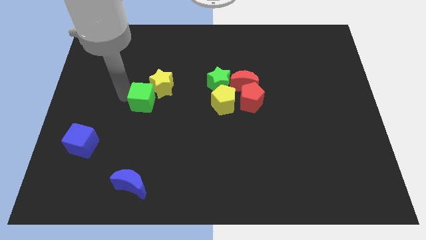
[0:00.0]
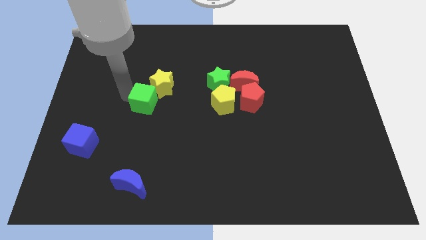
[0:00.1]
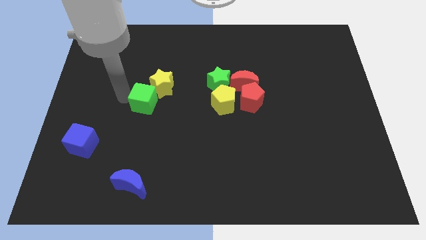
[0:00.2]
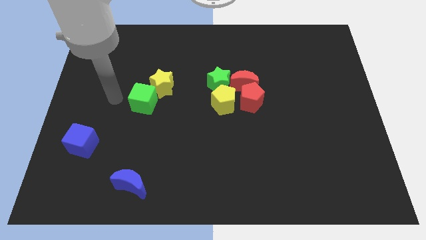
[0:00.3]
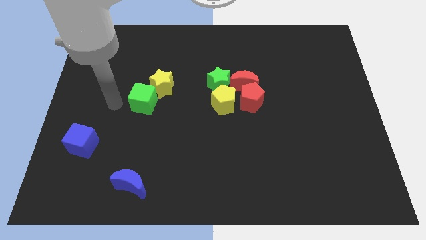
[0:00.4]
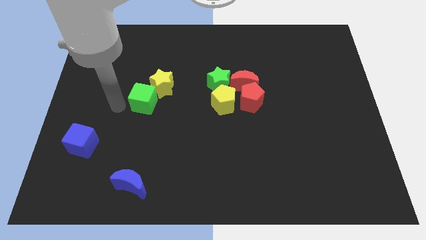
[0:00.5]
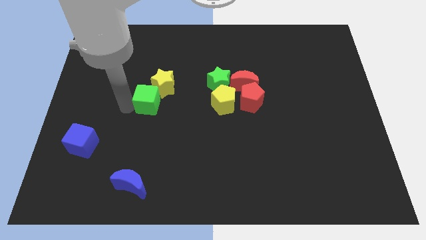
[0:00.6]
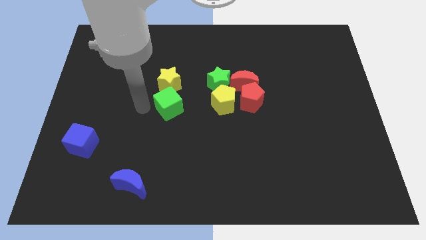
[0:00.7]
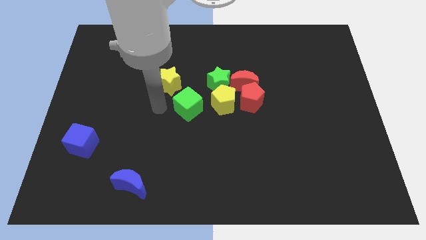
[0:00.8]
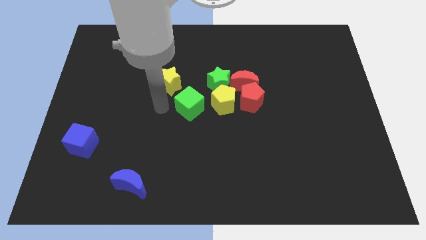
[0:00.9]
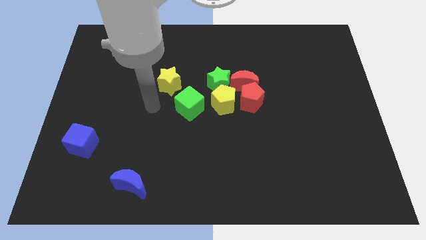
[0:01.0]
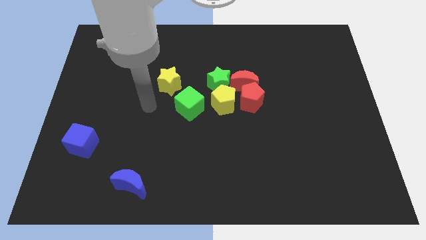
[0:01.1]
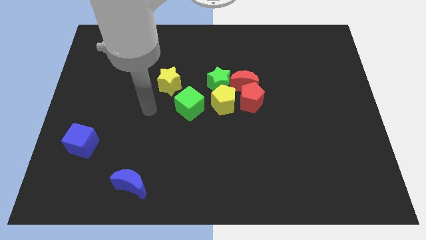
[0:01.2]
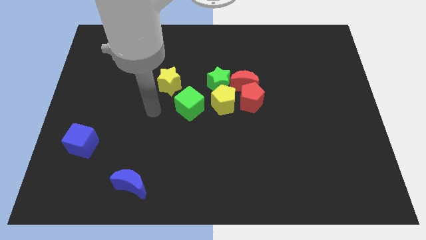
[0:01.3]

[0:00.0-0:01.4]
move the green cube to the left side of the yellow pentagon

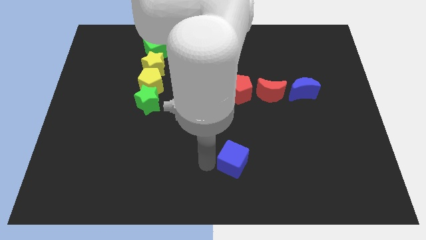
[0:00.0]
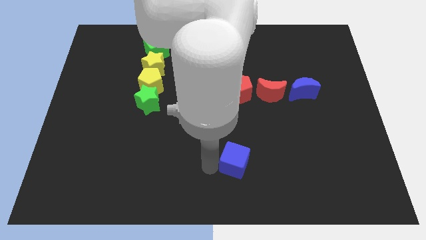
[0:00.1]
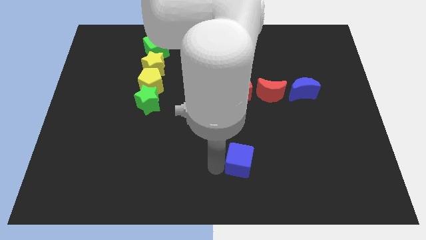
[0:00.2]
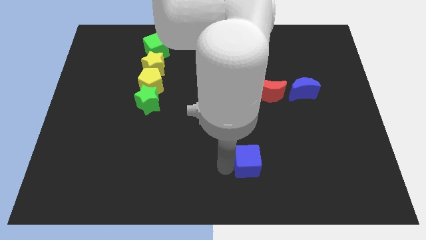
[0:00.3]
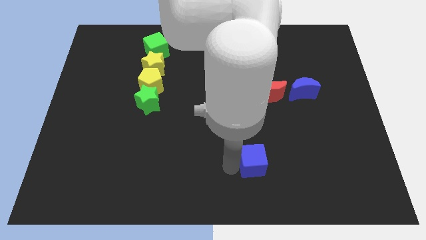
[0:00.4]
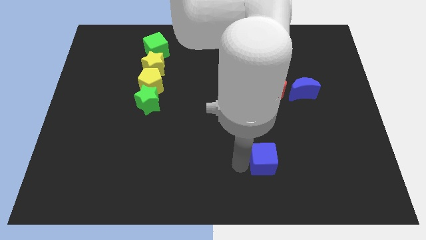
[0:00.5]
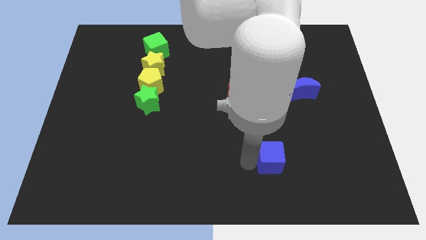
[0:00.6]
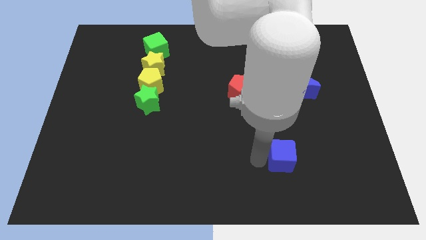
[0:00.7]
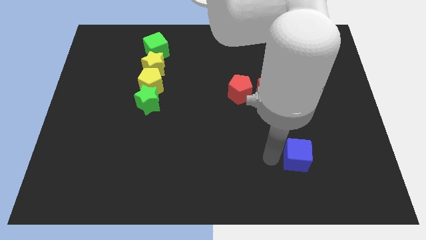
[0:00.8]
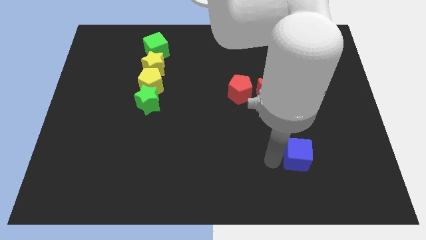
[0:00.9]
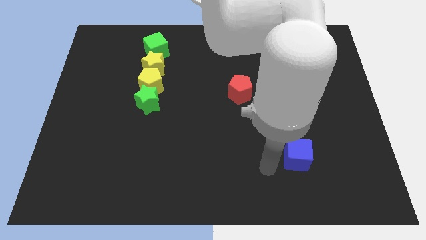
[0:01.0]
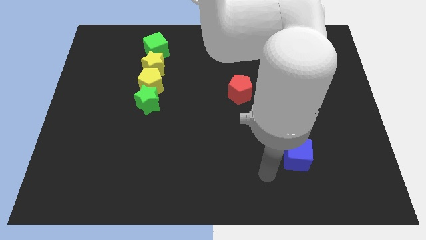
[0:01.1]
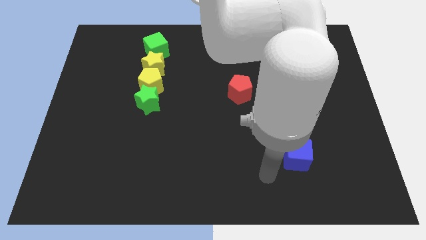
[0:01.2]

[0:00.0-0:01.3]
push the blue cube slightly to the right

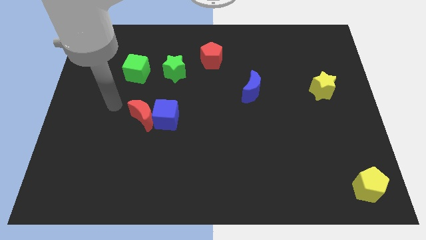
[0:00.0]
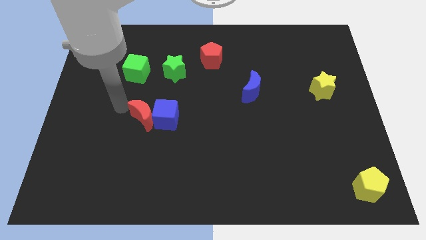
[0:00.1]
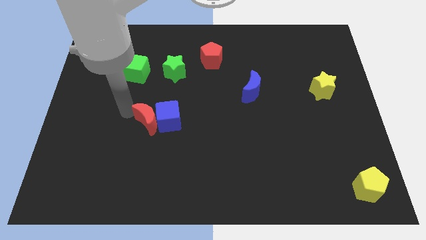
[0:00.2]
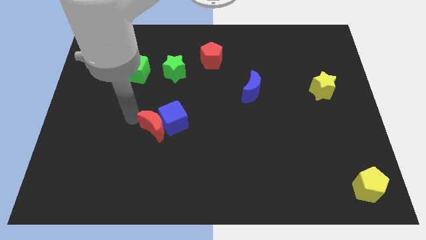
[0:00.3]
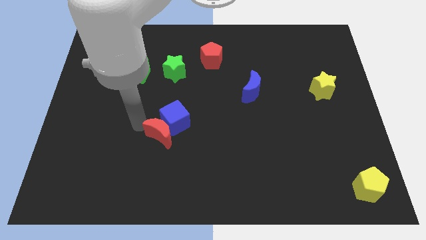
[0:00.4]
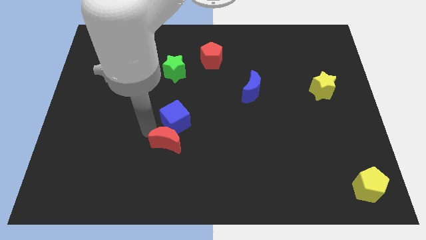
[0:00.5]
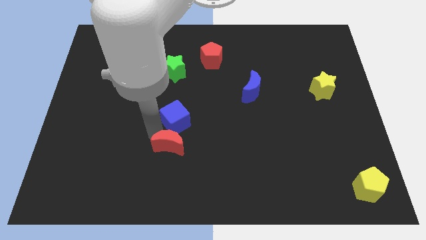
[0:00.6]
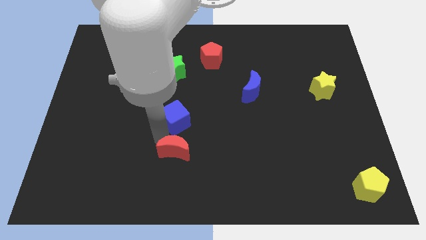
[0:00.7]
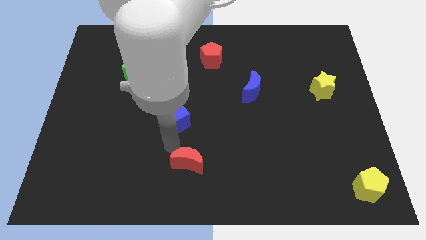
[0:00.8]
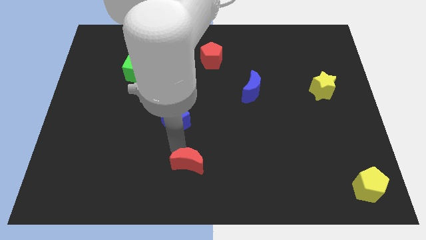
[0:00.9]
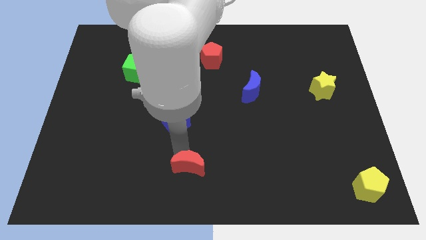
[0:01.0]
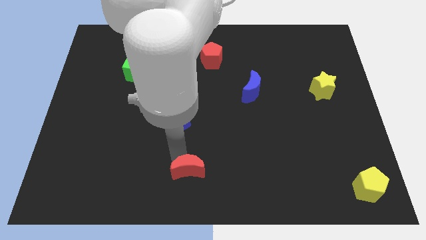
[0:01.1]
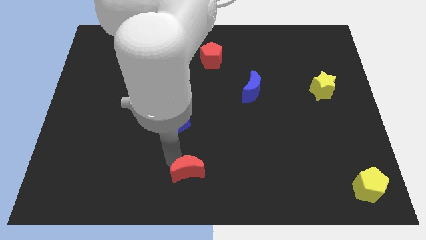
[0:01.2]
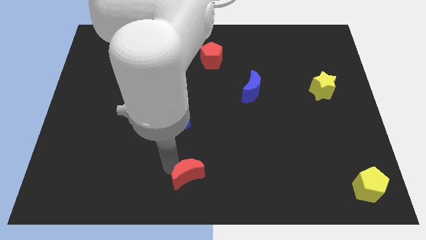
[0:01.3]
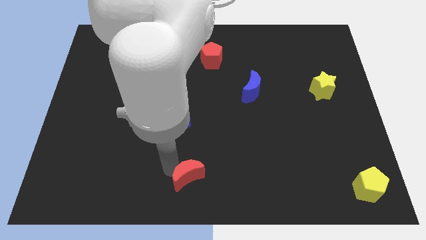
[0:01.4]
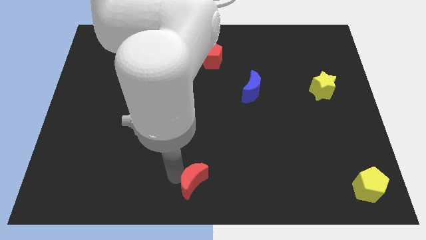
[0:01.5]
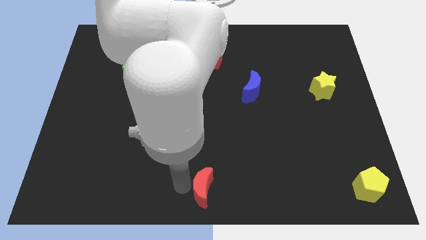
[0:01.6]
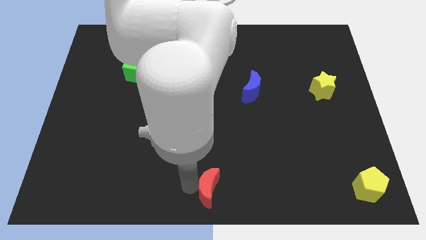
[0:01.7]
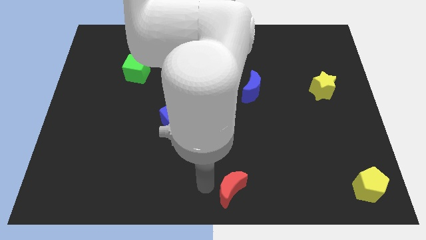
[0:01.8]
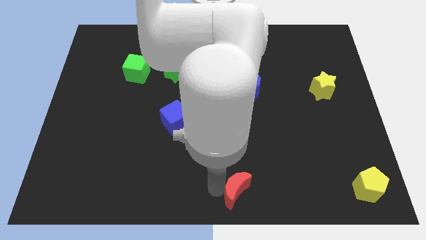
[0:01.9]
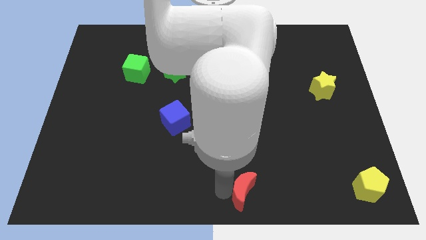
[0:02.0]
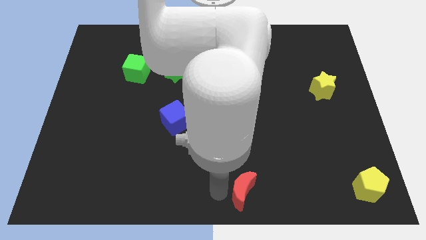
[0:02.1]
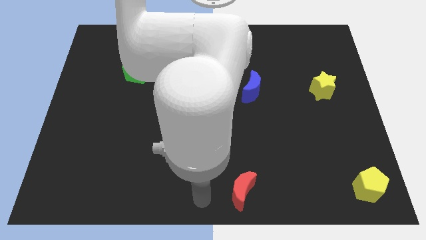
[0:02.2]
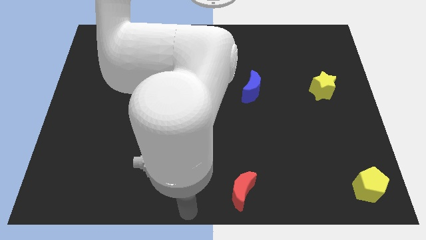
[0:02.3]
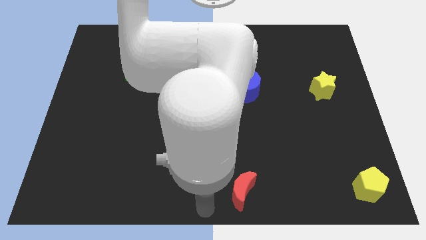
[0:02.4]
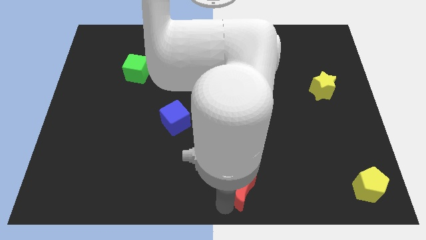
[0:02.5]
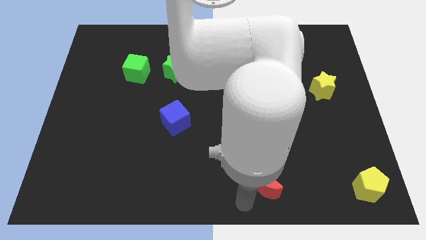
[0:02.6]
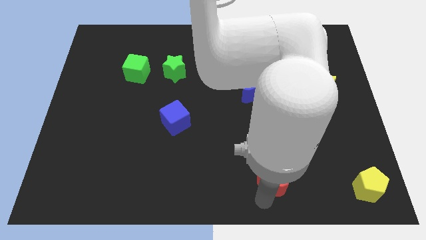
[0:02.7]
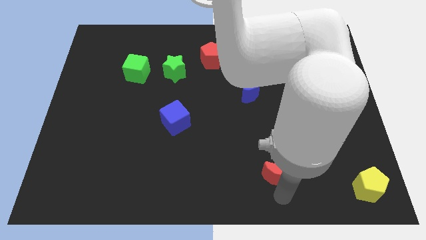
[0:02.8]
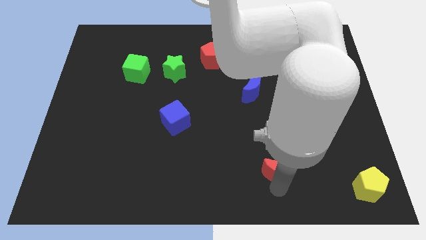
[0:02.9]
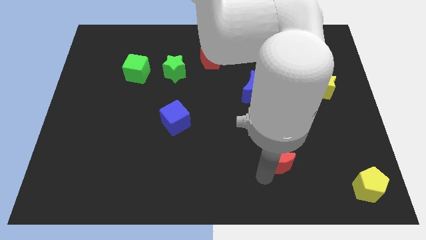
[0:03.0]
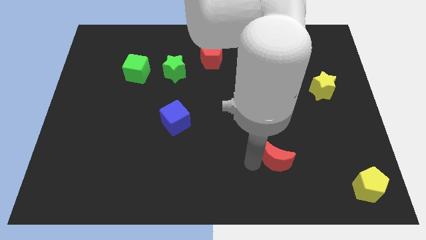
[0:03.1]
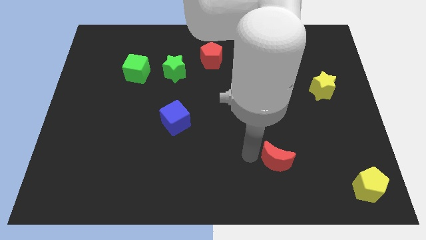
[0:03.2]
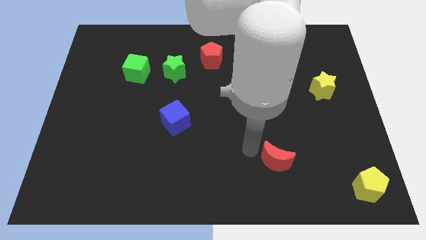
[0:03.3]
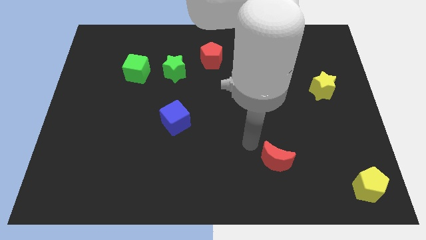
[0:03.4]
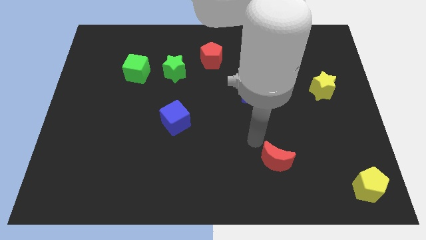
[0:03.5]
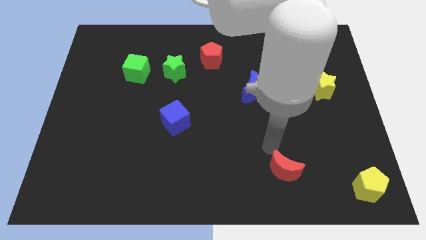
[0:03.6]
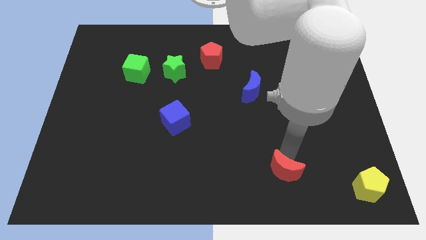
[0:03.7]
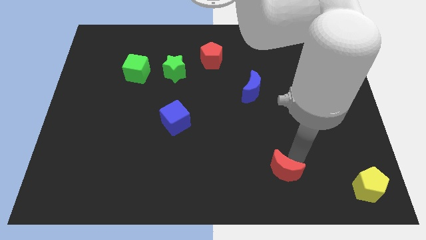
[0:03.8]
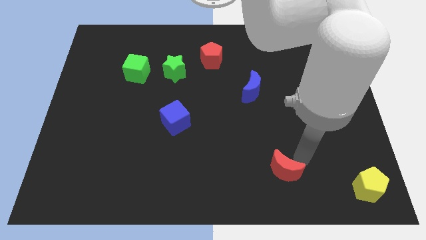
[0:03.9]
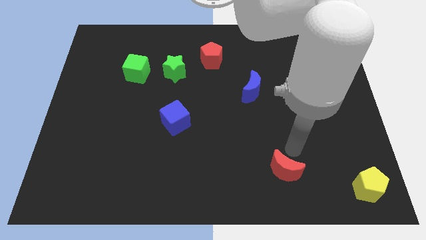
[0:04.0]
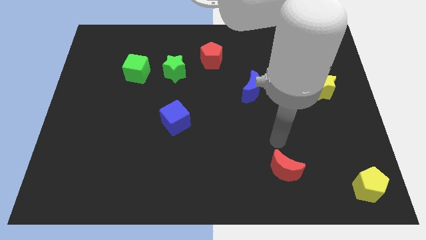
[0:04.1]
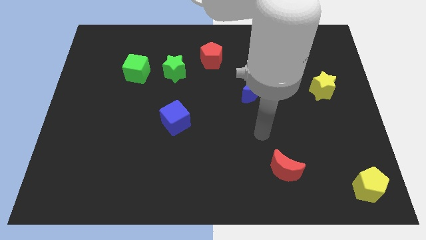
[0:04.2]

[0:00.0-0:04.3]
push the red moon diagonally to the bottom right of the green star

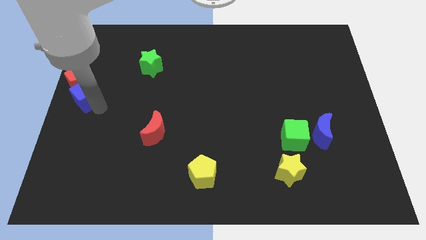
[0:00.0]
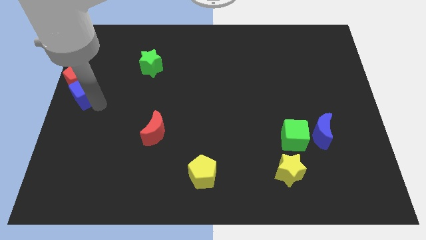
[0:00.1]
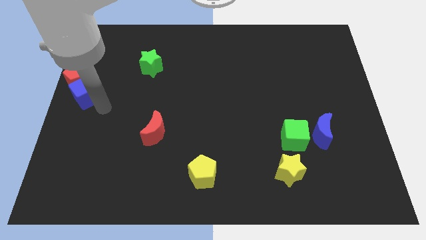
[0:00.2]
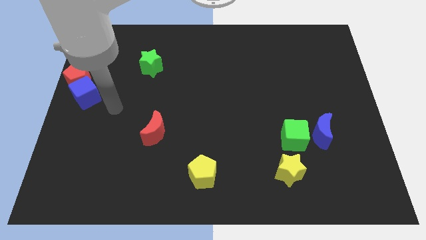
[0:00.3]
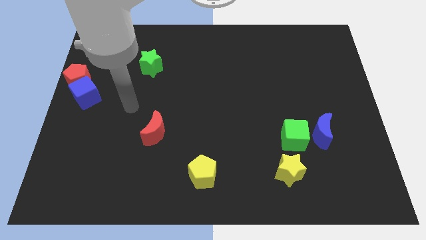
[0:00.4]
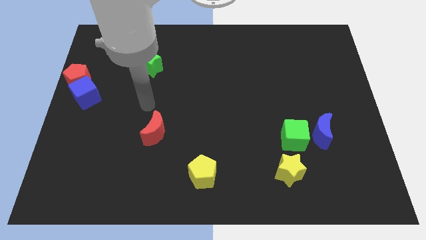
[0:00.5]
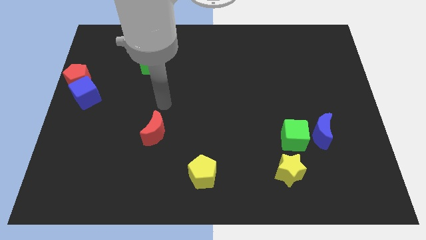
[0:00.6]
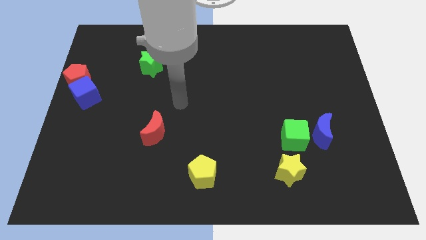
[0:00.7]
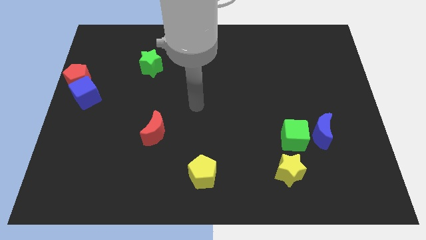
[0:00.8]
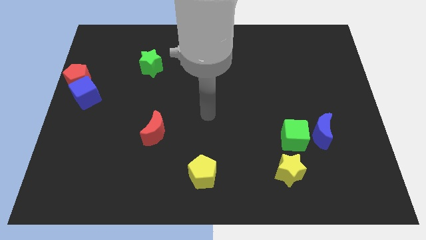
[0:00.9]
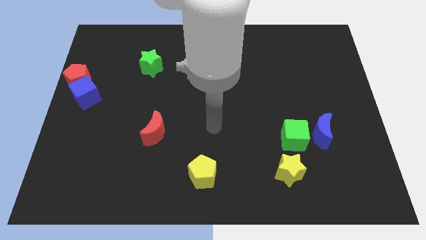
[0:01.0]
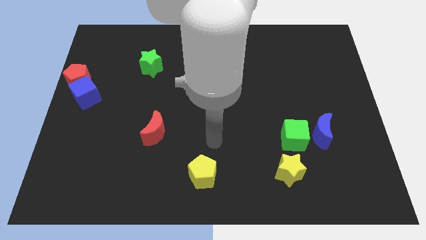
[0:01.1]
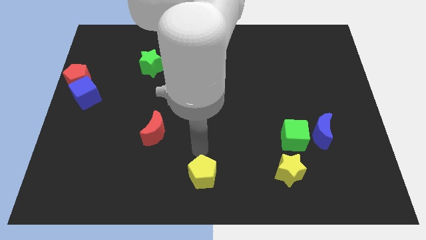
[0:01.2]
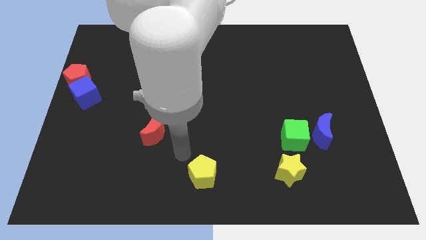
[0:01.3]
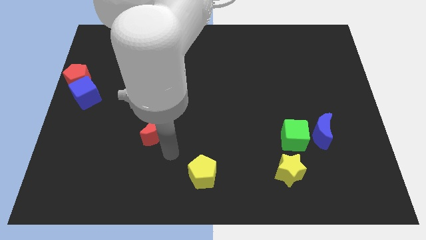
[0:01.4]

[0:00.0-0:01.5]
place your arm beside the red moon

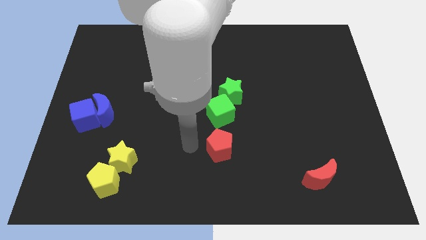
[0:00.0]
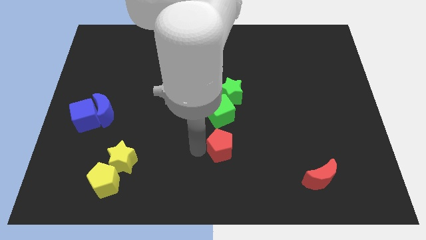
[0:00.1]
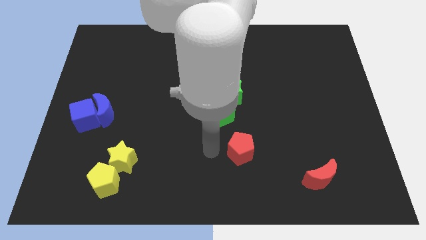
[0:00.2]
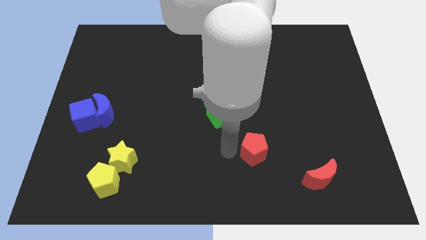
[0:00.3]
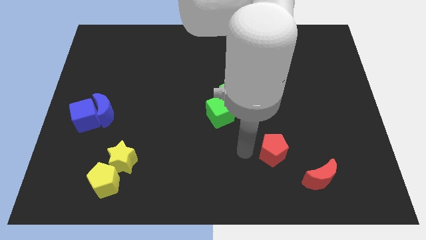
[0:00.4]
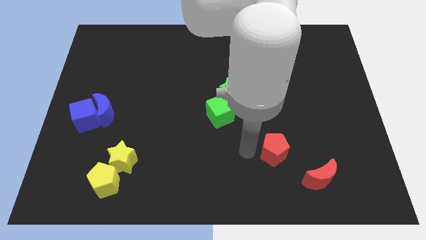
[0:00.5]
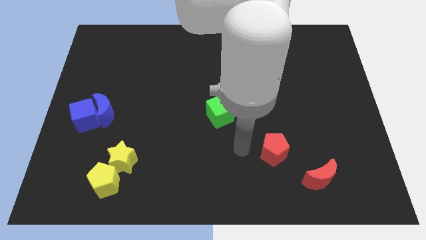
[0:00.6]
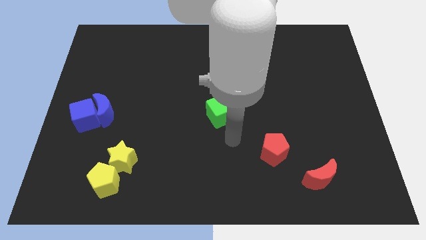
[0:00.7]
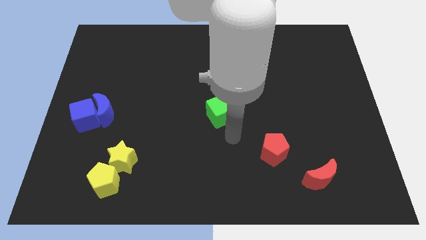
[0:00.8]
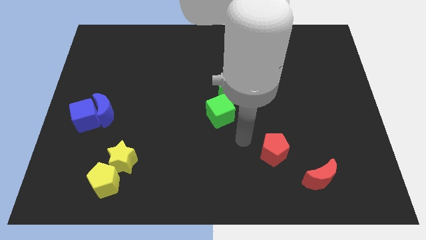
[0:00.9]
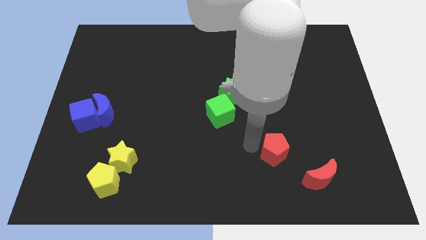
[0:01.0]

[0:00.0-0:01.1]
move the red pentagon away from the green cube
